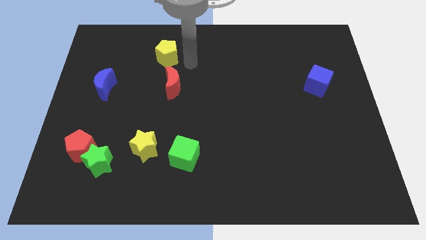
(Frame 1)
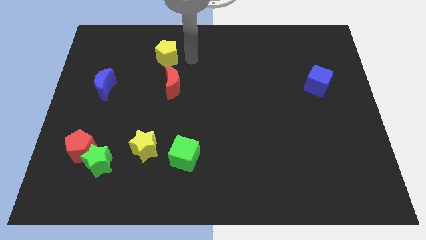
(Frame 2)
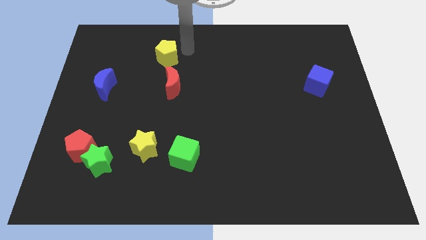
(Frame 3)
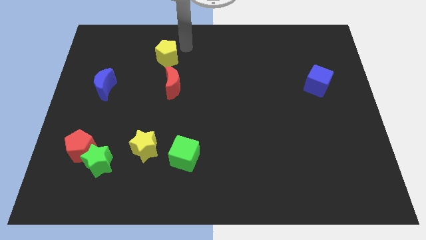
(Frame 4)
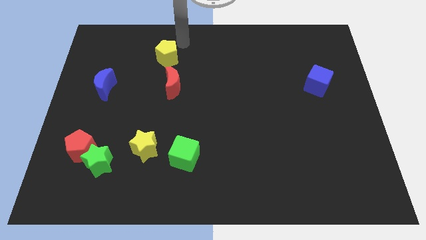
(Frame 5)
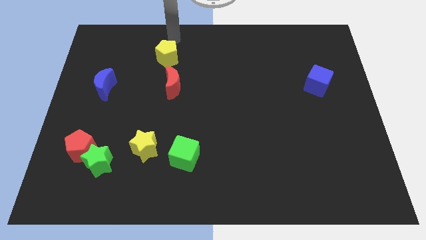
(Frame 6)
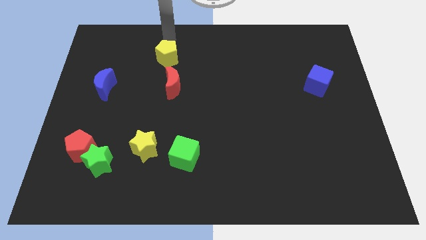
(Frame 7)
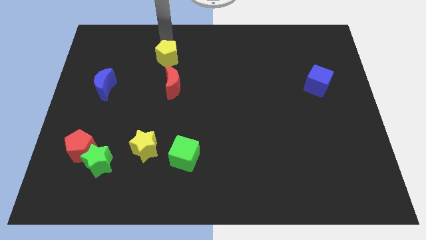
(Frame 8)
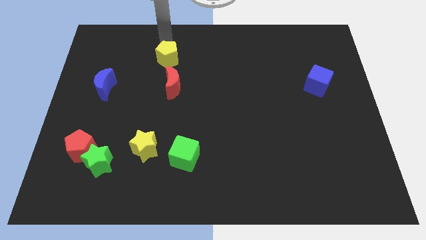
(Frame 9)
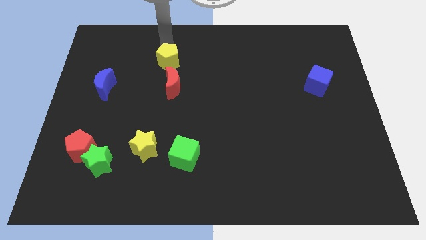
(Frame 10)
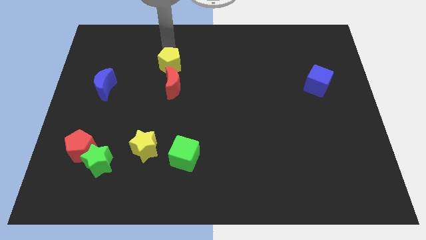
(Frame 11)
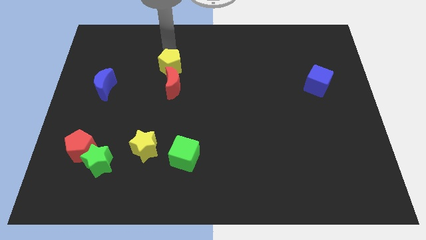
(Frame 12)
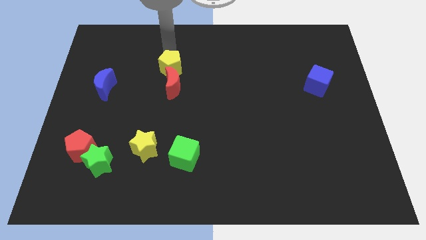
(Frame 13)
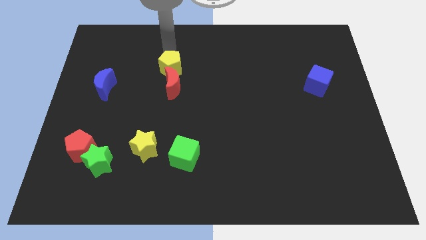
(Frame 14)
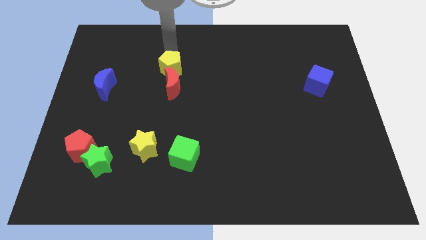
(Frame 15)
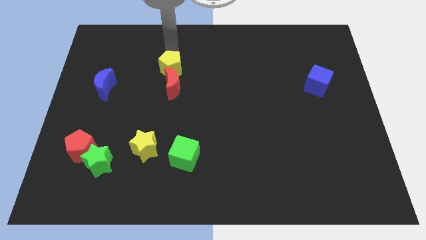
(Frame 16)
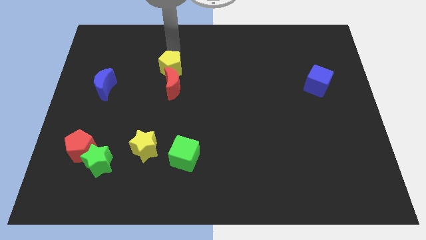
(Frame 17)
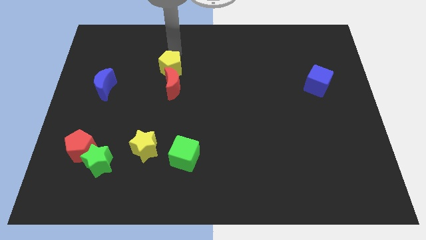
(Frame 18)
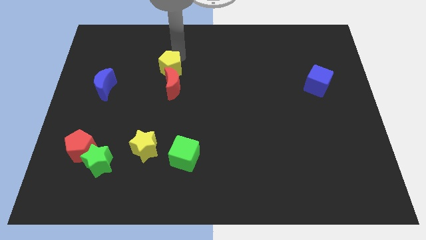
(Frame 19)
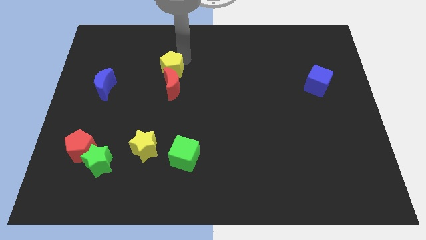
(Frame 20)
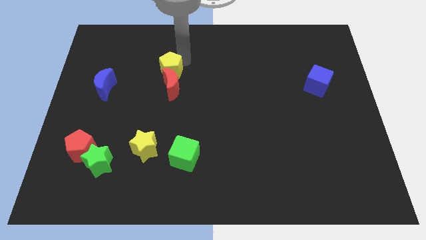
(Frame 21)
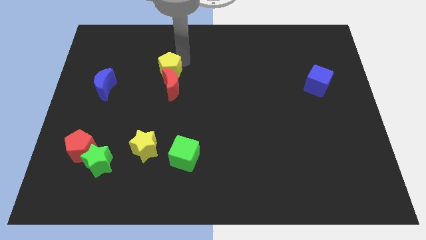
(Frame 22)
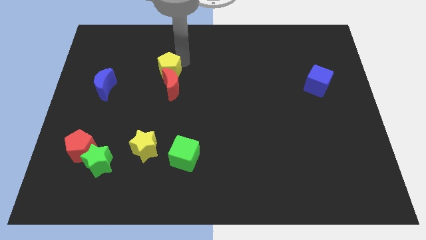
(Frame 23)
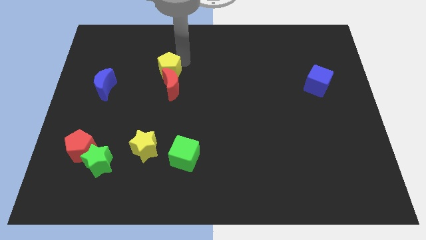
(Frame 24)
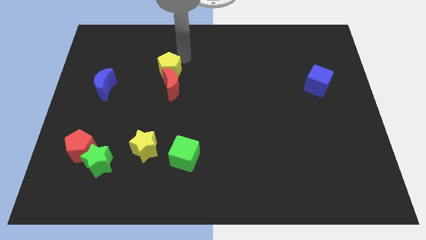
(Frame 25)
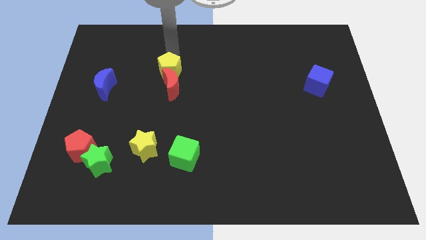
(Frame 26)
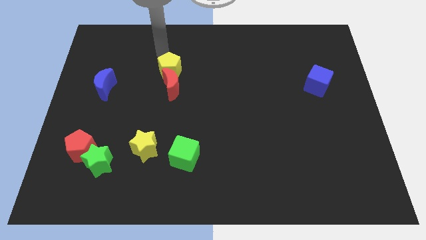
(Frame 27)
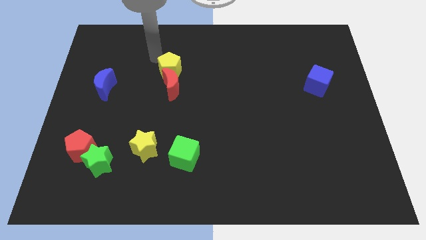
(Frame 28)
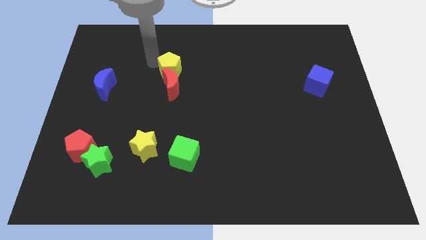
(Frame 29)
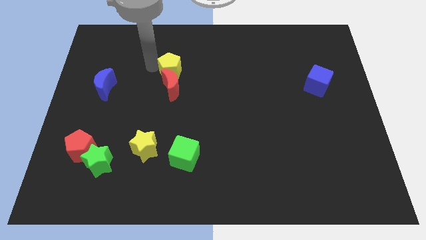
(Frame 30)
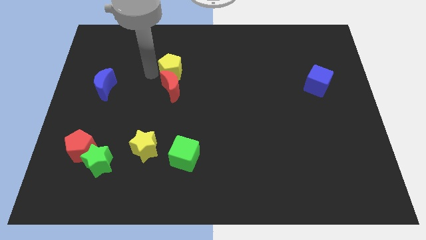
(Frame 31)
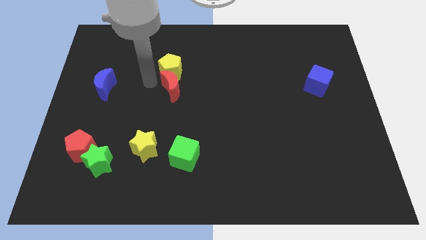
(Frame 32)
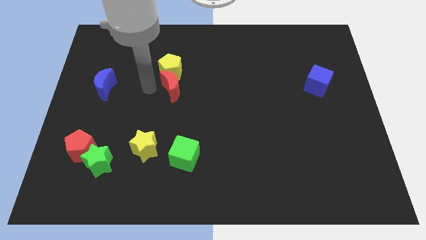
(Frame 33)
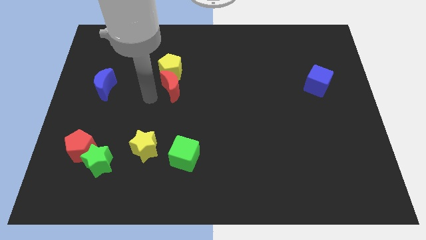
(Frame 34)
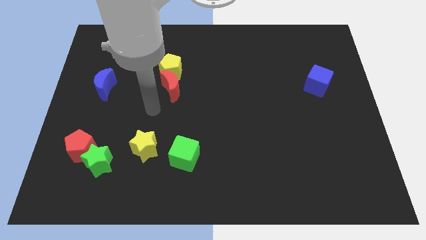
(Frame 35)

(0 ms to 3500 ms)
push yellow pentagon into the red moon

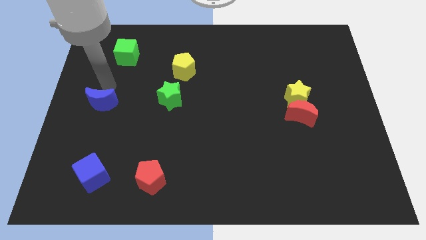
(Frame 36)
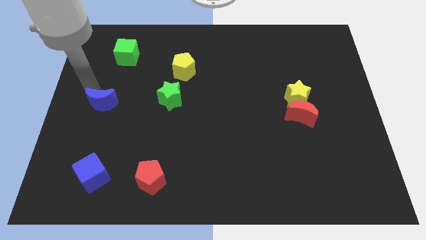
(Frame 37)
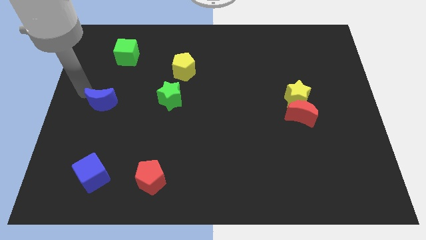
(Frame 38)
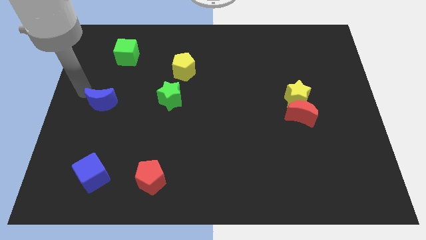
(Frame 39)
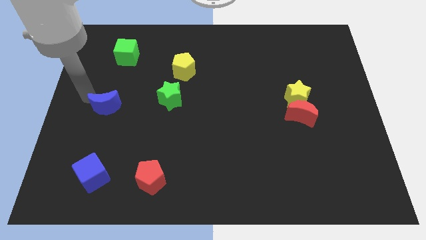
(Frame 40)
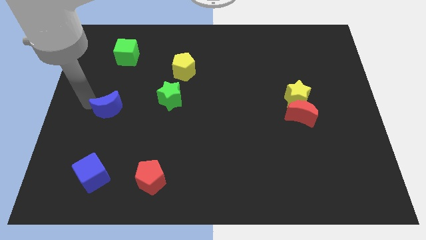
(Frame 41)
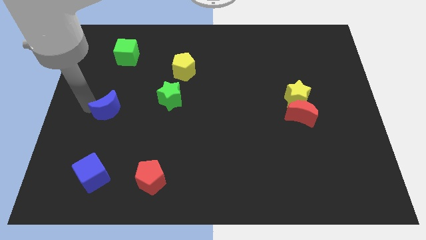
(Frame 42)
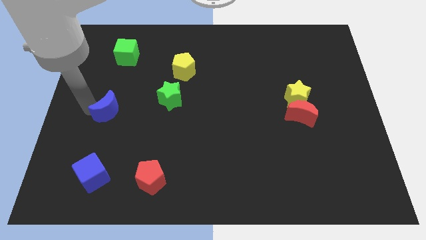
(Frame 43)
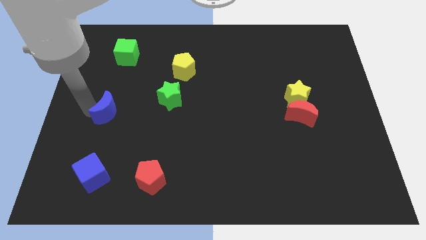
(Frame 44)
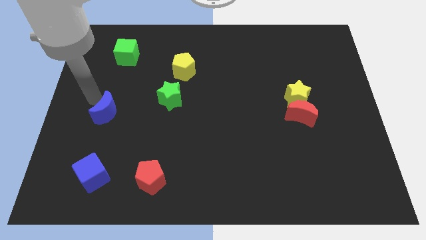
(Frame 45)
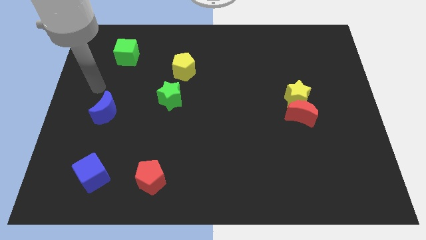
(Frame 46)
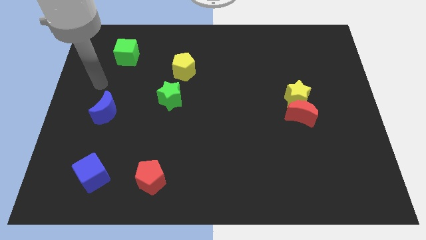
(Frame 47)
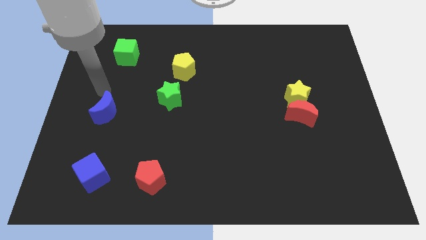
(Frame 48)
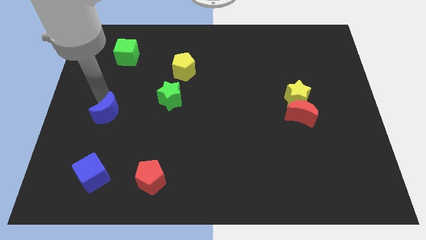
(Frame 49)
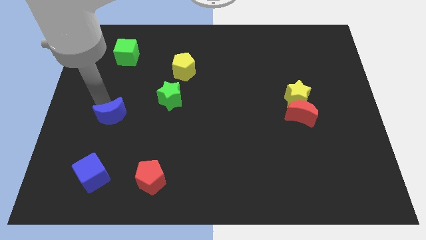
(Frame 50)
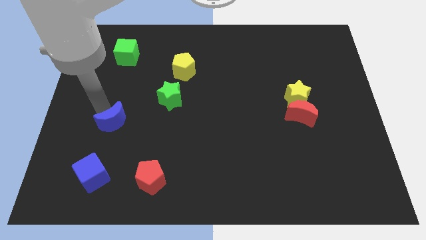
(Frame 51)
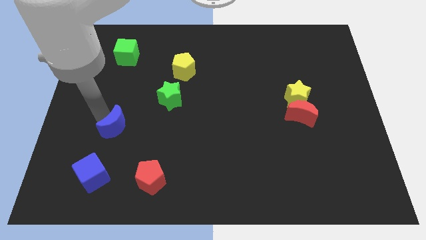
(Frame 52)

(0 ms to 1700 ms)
slide the blue moon diagonally bottom left to the green star

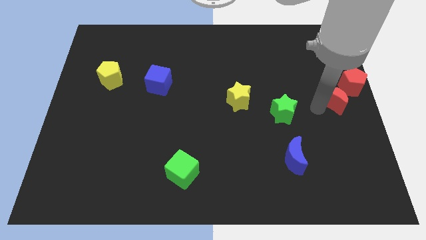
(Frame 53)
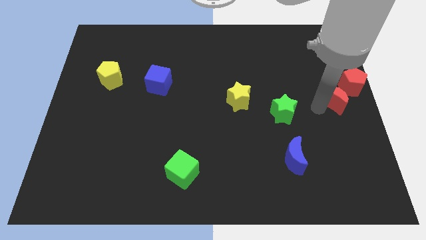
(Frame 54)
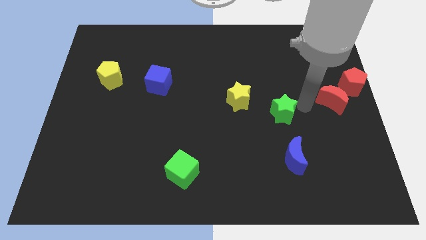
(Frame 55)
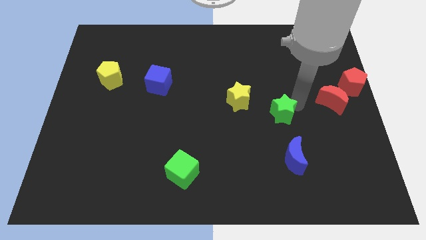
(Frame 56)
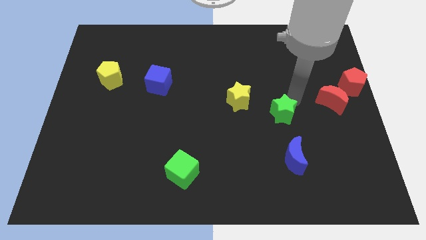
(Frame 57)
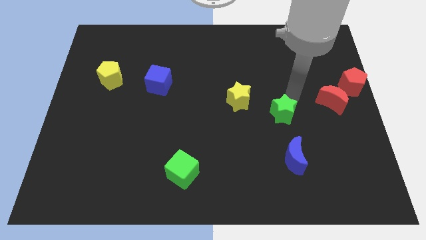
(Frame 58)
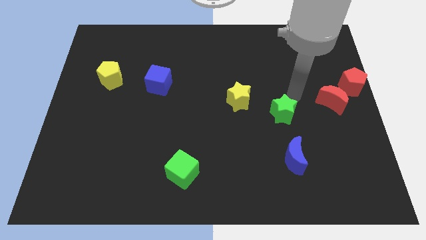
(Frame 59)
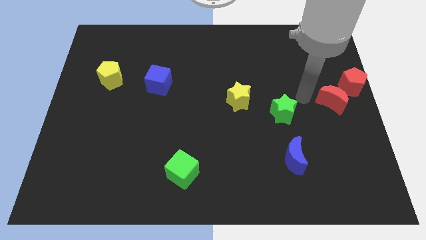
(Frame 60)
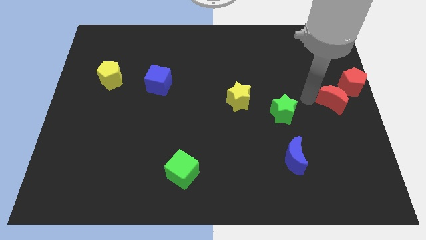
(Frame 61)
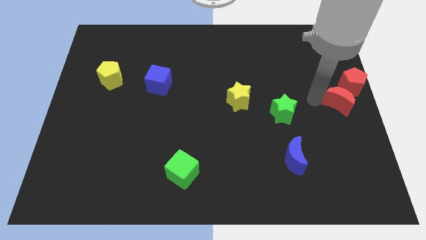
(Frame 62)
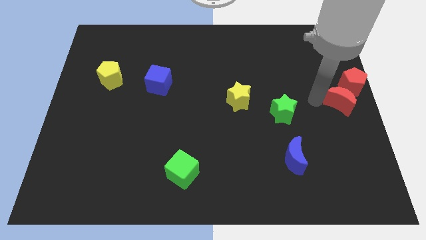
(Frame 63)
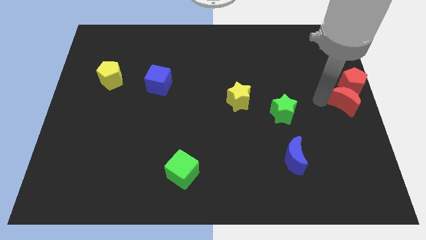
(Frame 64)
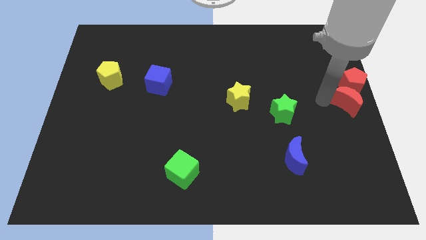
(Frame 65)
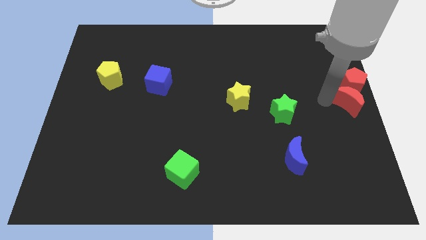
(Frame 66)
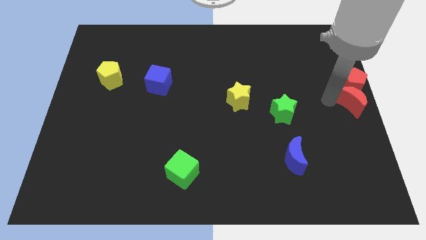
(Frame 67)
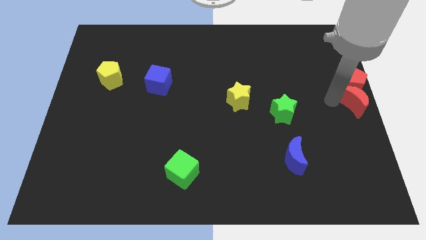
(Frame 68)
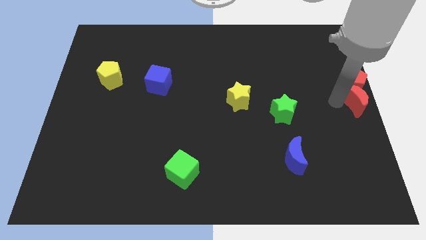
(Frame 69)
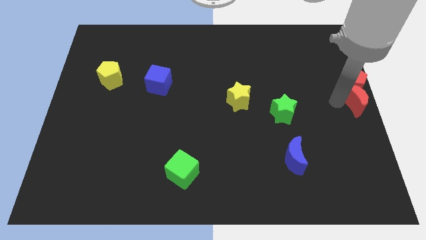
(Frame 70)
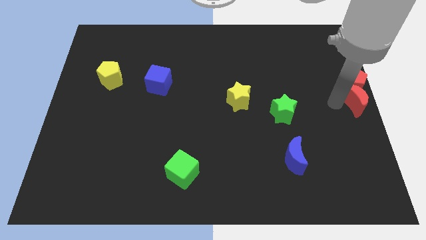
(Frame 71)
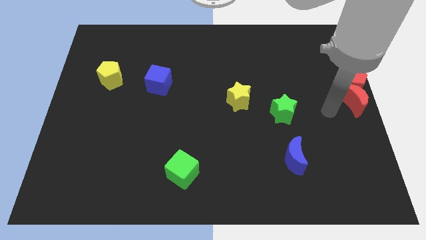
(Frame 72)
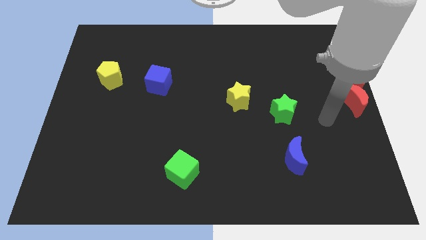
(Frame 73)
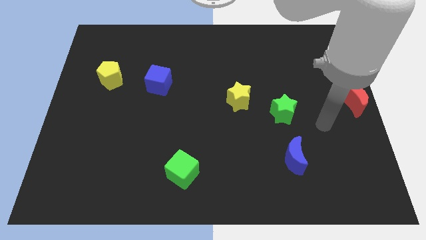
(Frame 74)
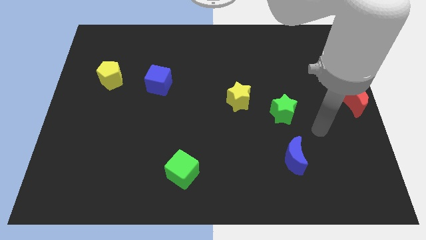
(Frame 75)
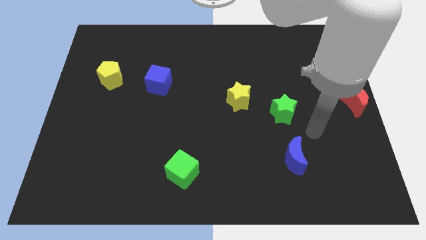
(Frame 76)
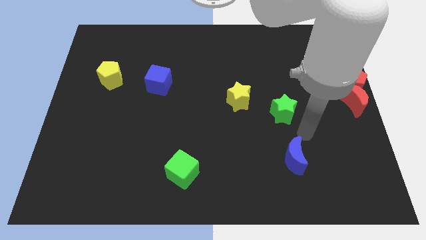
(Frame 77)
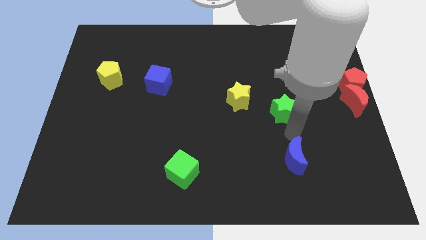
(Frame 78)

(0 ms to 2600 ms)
move the red moon below the red pentagon

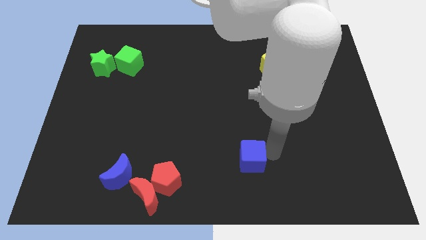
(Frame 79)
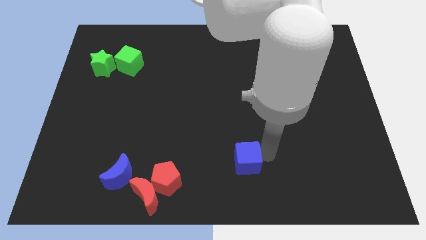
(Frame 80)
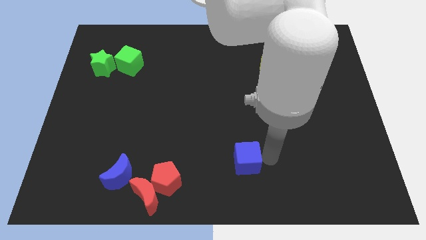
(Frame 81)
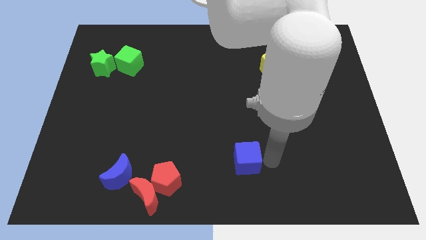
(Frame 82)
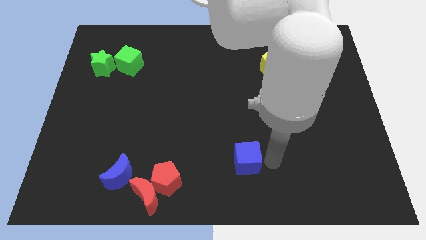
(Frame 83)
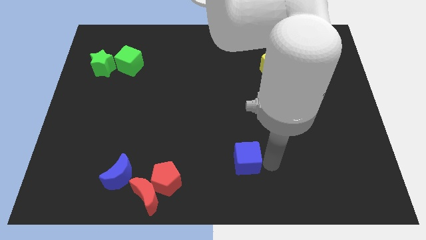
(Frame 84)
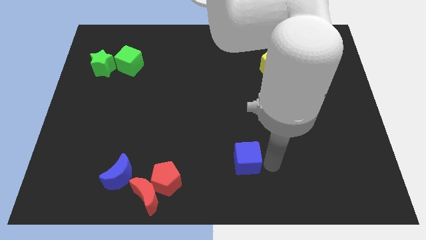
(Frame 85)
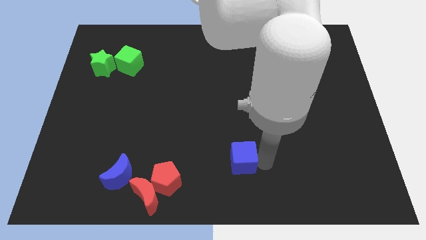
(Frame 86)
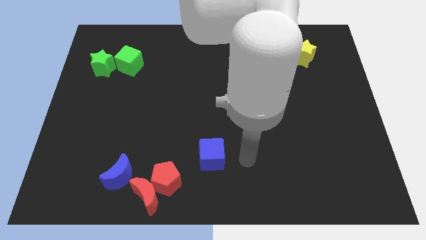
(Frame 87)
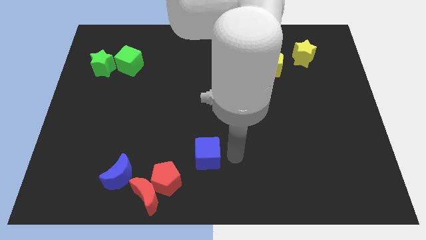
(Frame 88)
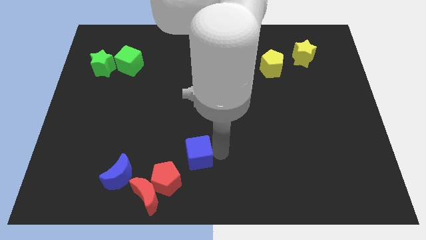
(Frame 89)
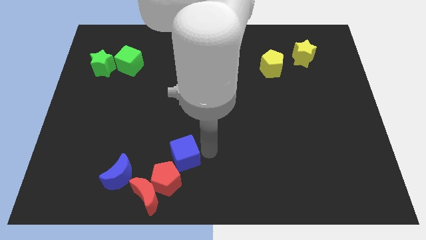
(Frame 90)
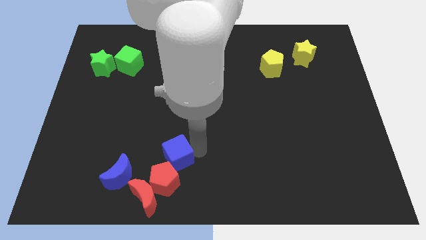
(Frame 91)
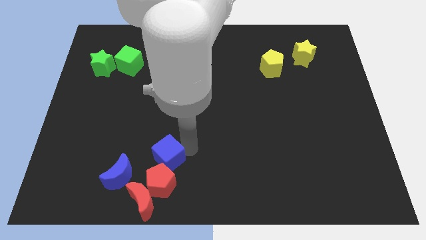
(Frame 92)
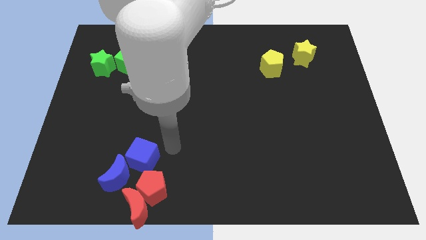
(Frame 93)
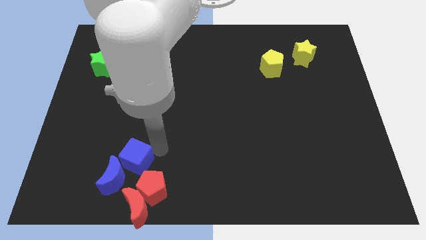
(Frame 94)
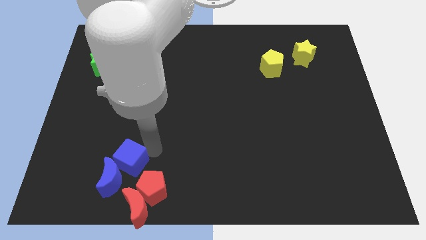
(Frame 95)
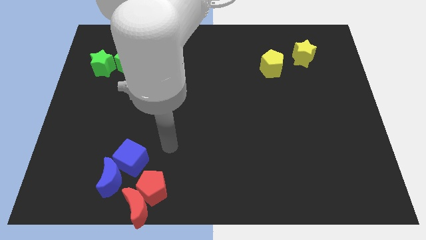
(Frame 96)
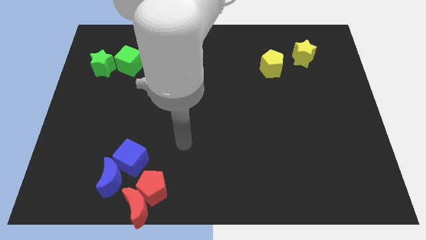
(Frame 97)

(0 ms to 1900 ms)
push the blue cube into the blue crescent
